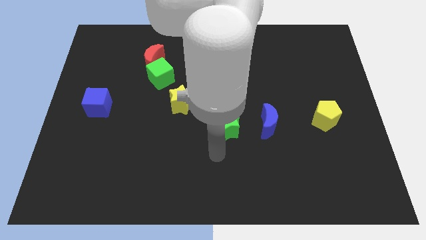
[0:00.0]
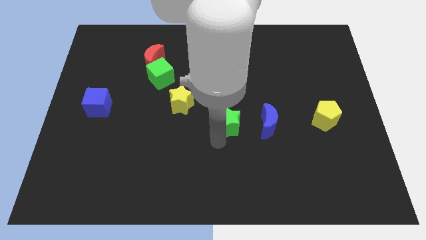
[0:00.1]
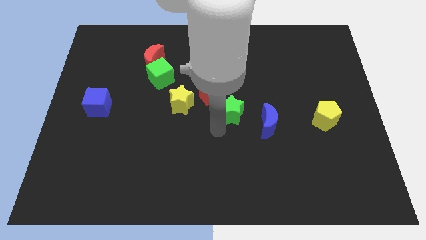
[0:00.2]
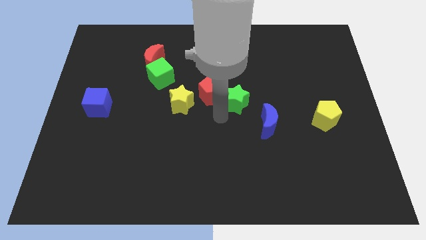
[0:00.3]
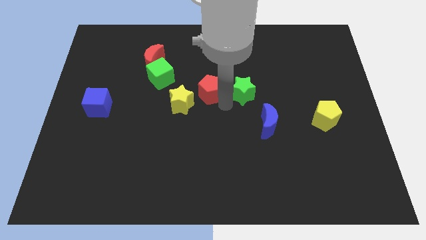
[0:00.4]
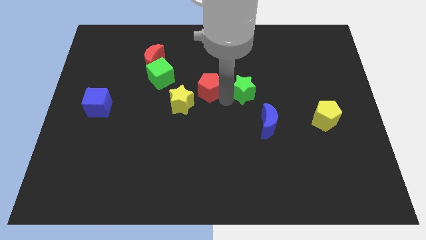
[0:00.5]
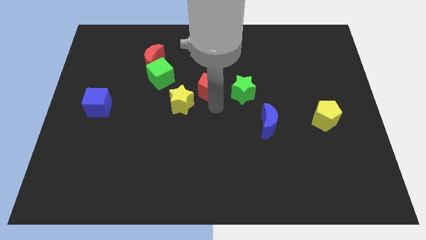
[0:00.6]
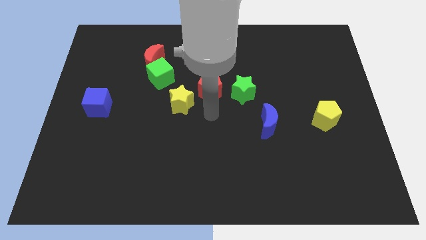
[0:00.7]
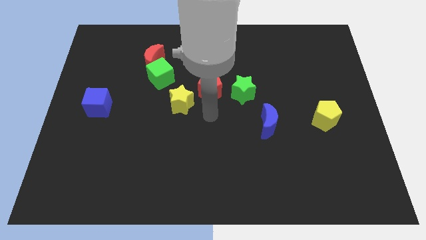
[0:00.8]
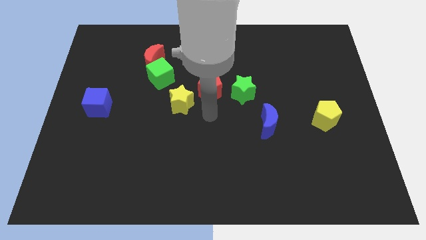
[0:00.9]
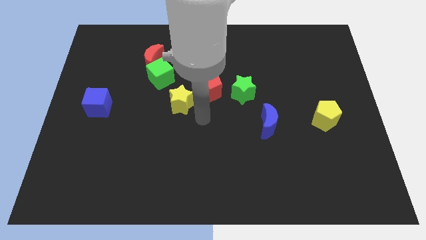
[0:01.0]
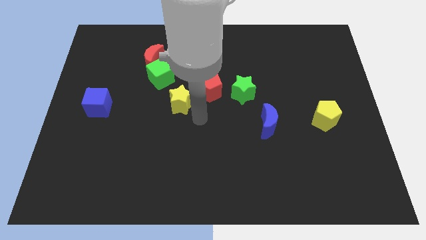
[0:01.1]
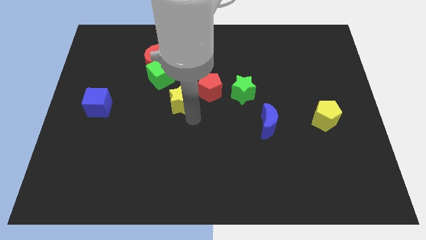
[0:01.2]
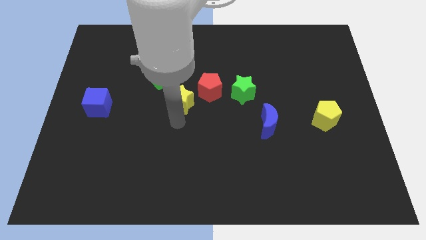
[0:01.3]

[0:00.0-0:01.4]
push the green star to the right of the red pentagon

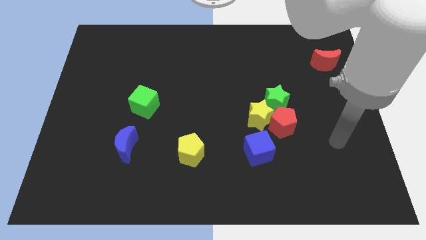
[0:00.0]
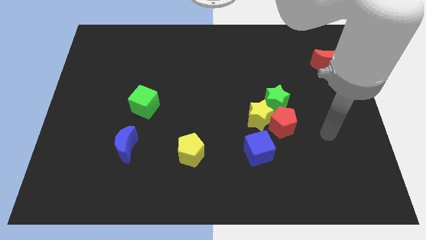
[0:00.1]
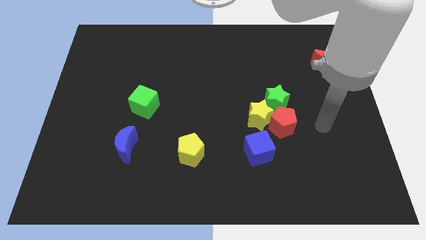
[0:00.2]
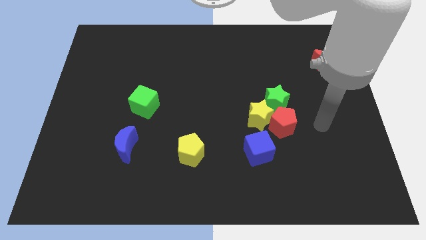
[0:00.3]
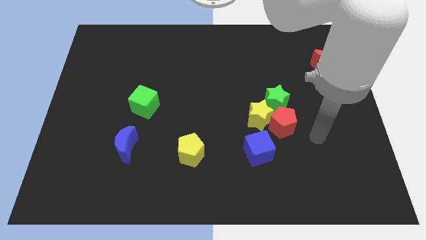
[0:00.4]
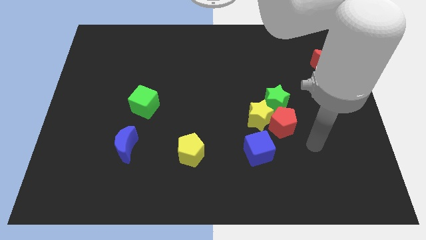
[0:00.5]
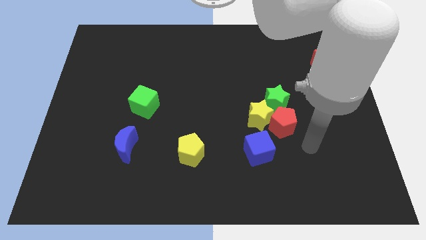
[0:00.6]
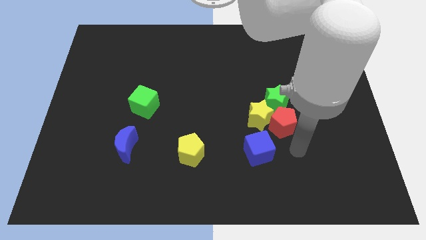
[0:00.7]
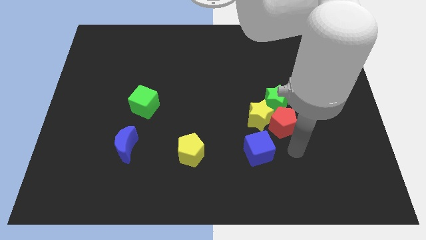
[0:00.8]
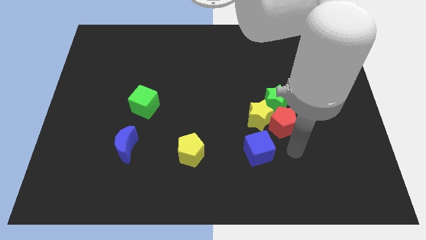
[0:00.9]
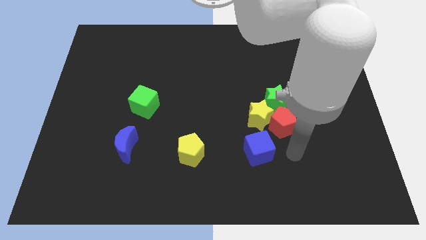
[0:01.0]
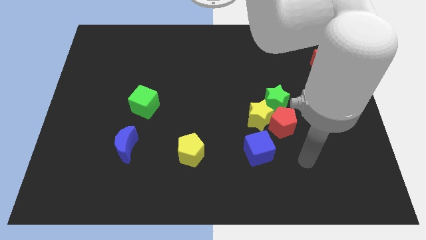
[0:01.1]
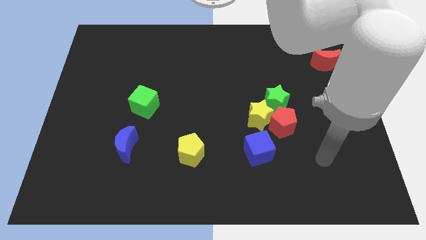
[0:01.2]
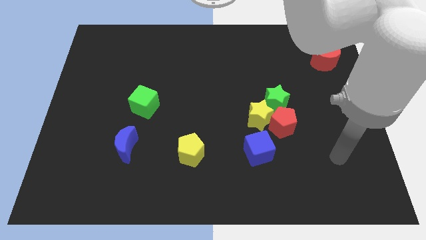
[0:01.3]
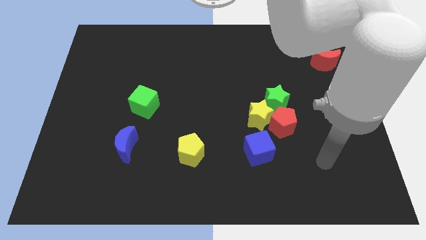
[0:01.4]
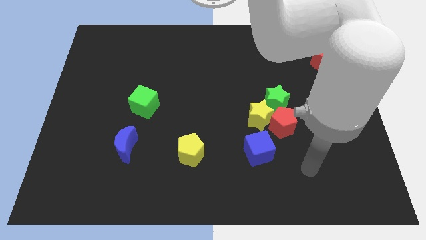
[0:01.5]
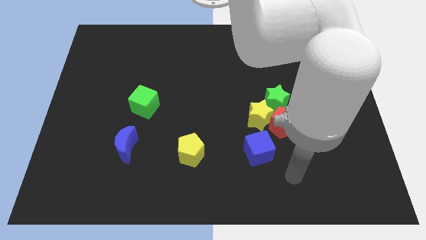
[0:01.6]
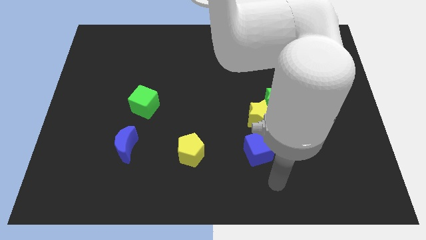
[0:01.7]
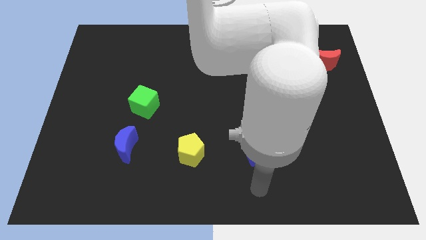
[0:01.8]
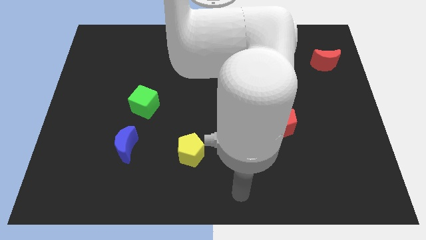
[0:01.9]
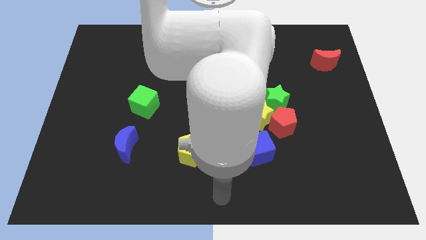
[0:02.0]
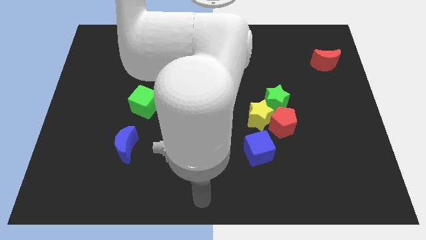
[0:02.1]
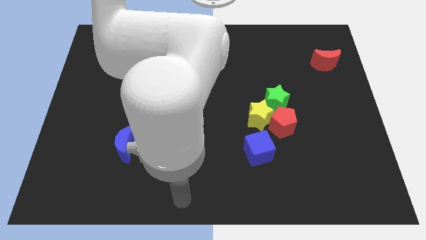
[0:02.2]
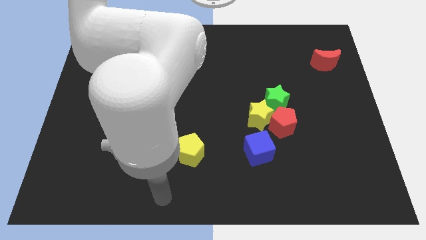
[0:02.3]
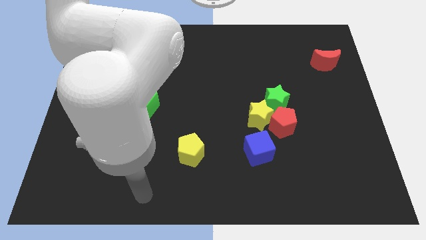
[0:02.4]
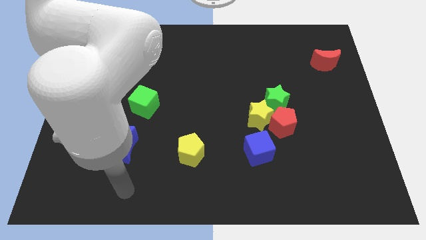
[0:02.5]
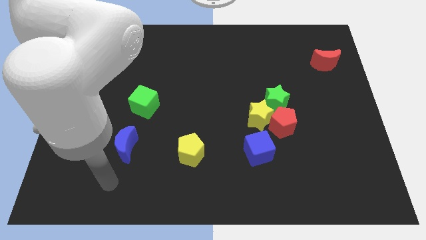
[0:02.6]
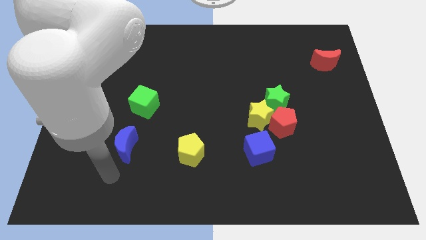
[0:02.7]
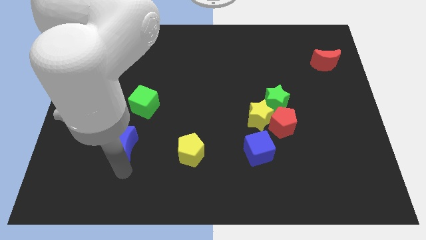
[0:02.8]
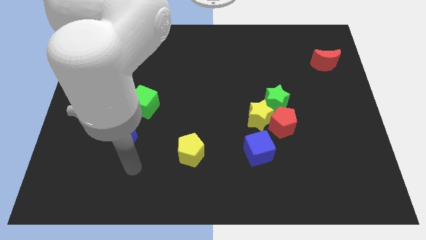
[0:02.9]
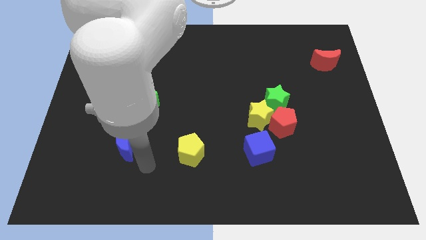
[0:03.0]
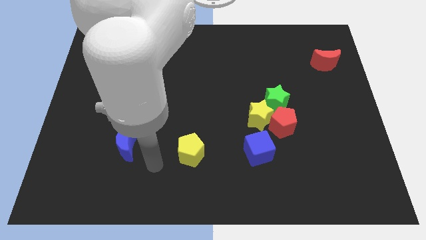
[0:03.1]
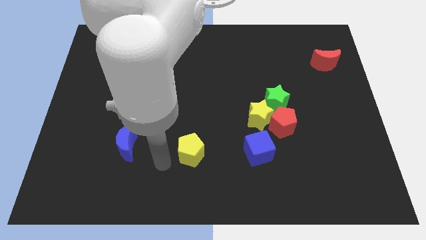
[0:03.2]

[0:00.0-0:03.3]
move the arm towards the yellow pentagon

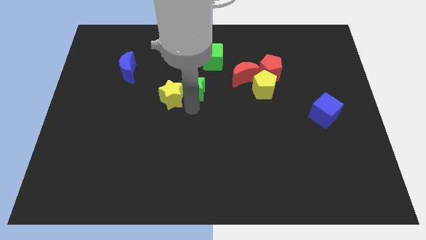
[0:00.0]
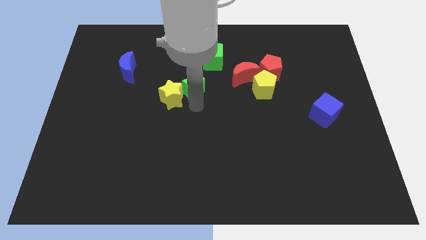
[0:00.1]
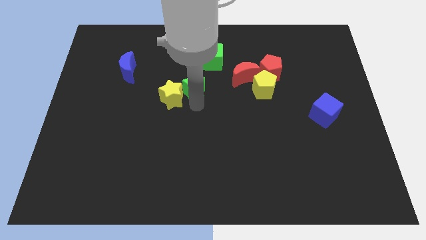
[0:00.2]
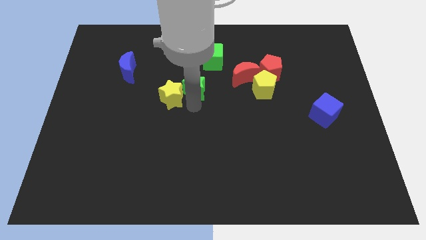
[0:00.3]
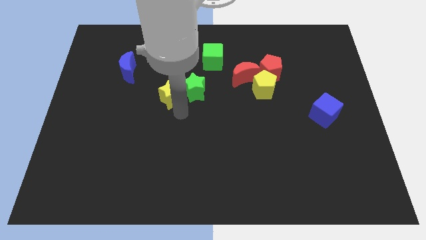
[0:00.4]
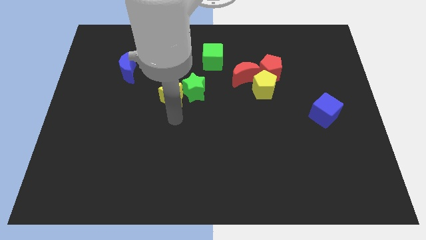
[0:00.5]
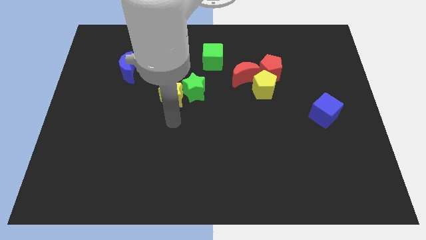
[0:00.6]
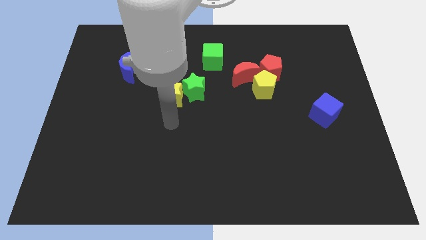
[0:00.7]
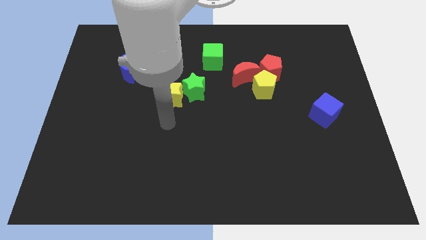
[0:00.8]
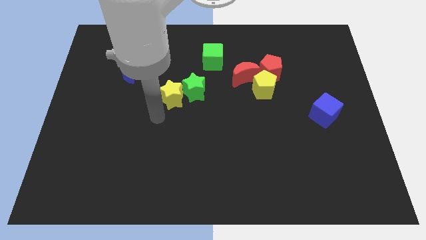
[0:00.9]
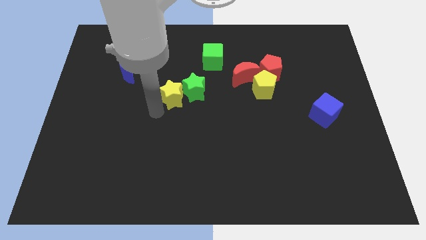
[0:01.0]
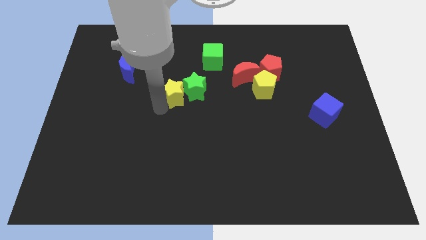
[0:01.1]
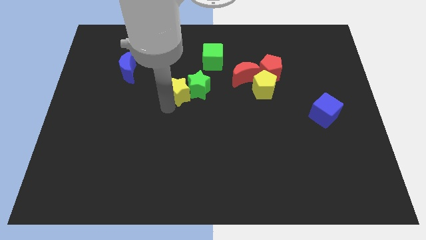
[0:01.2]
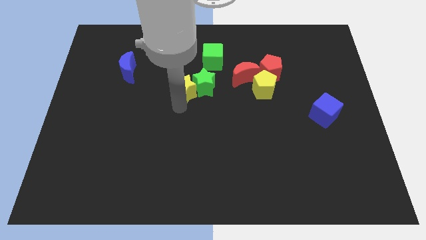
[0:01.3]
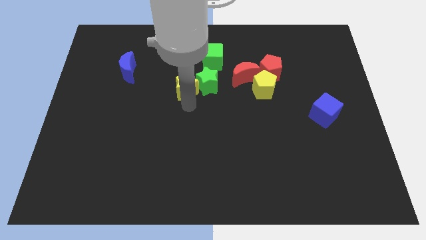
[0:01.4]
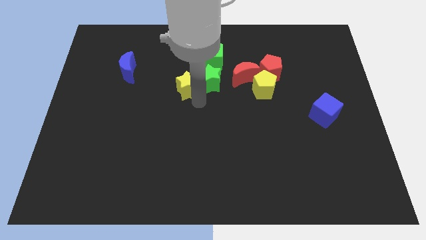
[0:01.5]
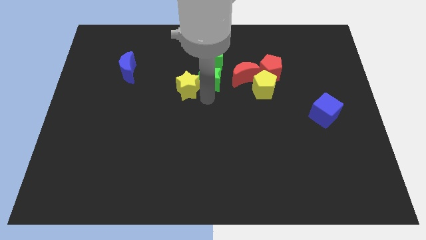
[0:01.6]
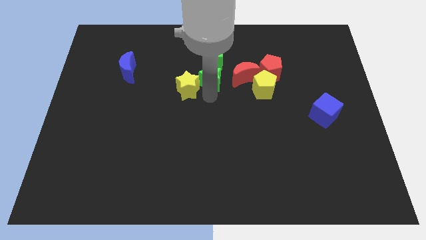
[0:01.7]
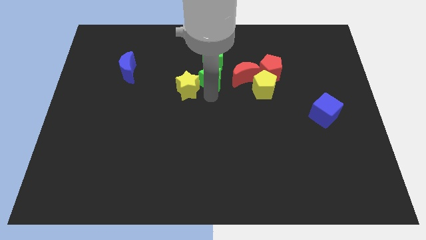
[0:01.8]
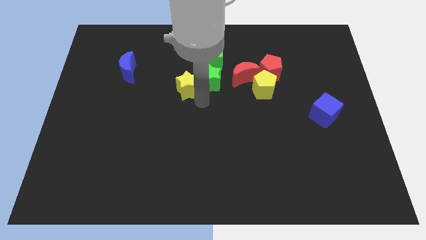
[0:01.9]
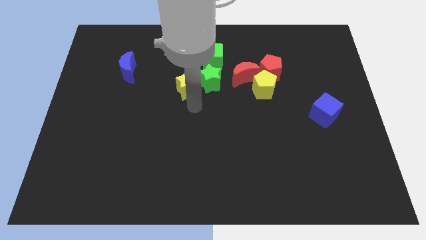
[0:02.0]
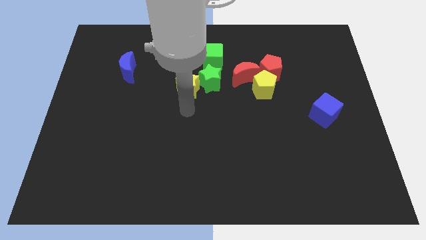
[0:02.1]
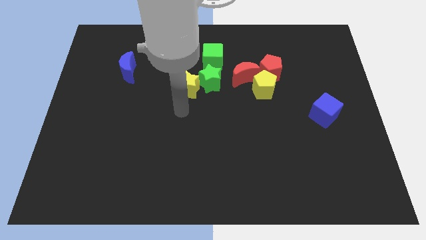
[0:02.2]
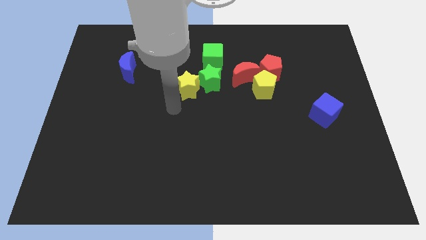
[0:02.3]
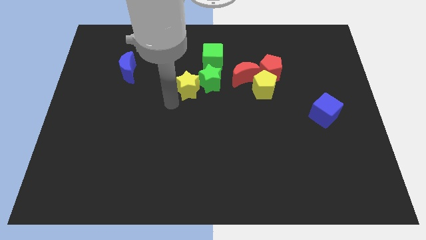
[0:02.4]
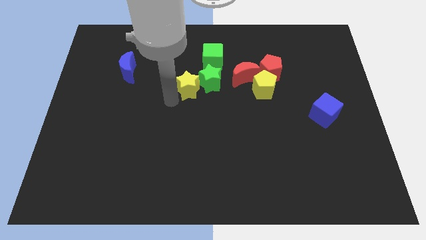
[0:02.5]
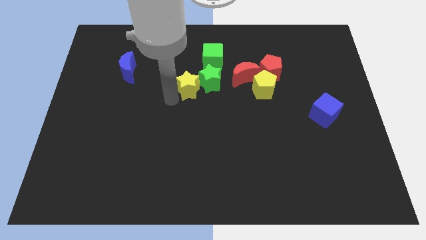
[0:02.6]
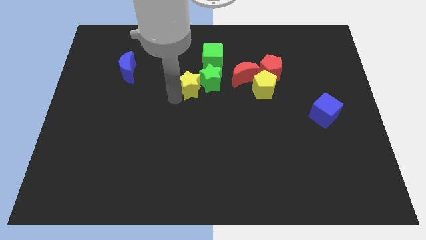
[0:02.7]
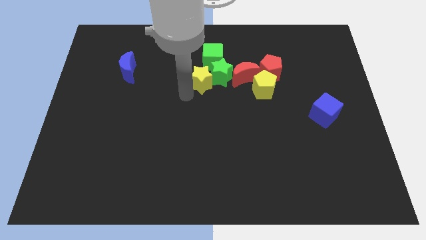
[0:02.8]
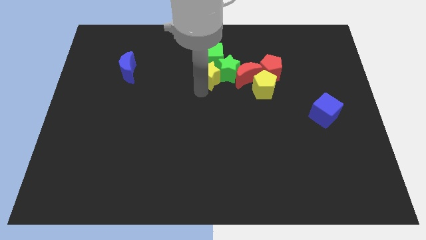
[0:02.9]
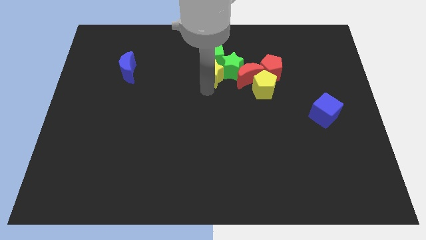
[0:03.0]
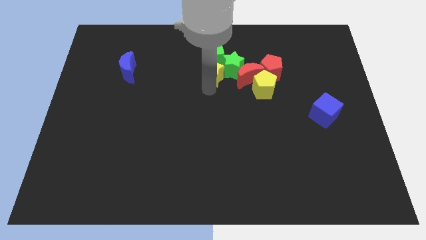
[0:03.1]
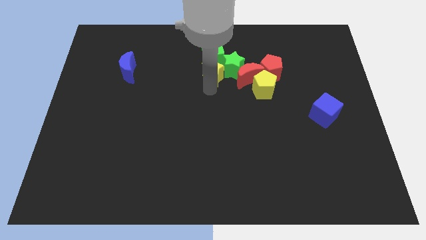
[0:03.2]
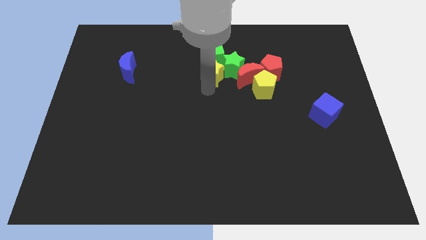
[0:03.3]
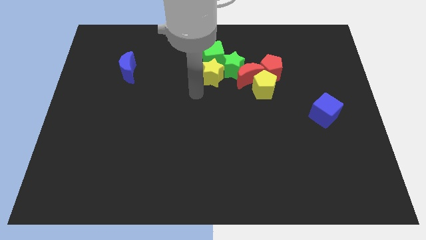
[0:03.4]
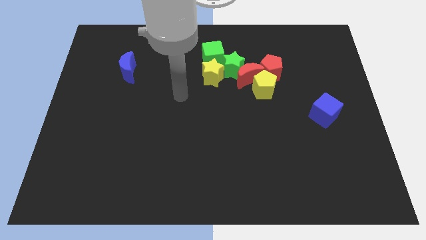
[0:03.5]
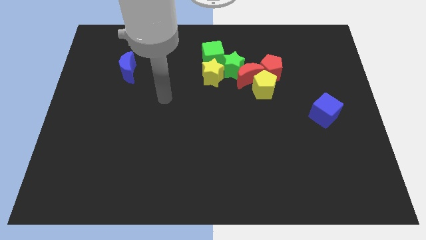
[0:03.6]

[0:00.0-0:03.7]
place yellow star below the green cube

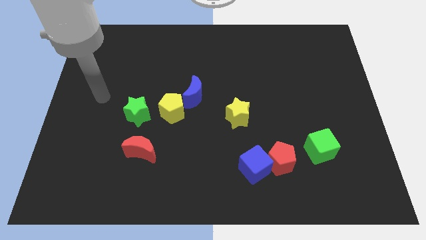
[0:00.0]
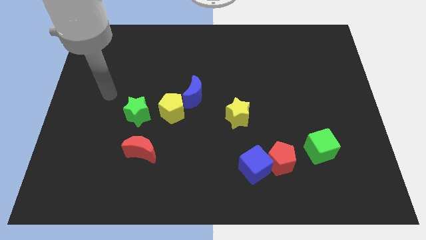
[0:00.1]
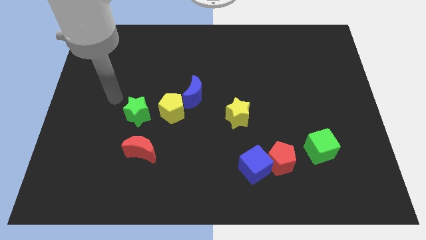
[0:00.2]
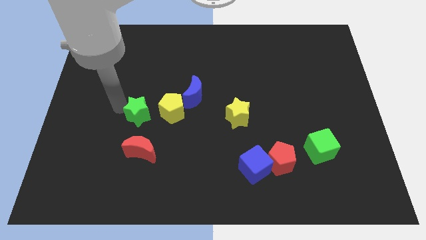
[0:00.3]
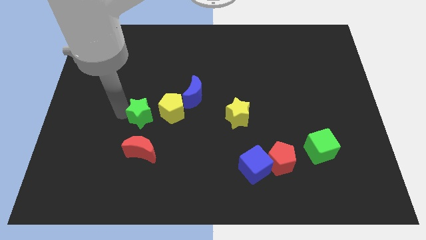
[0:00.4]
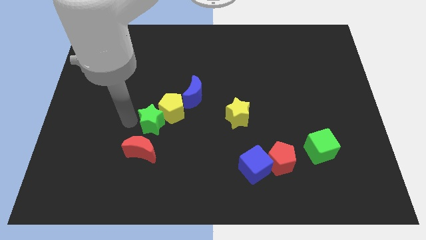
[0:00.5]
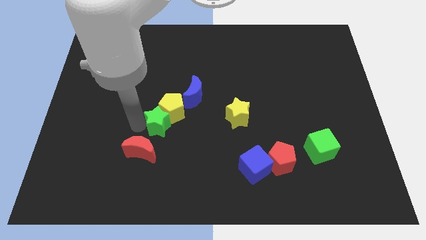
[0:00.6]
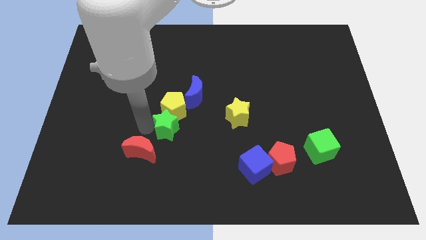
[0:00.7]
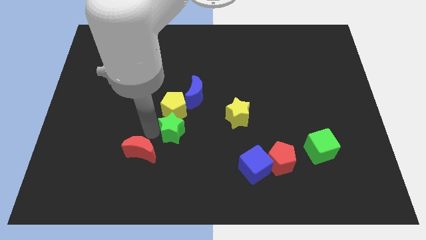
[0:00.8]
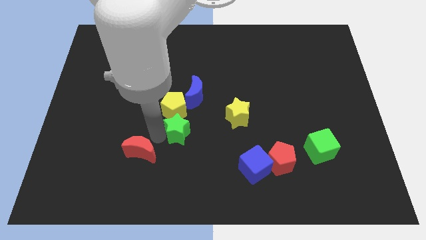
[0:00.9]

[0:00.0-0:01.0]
place green star to the bottom of yellow pentagon
